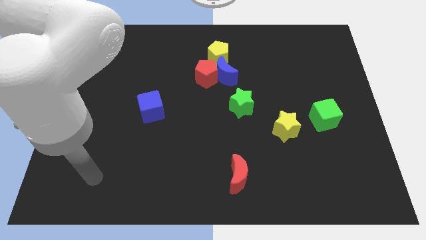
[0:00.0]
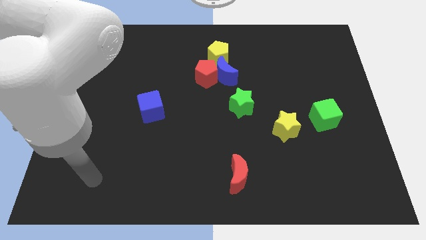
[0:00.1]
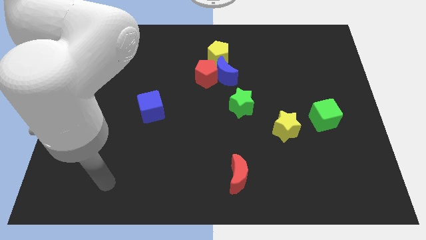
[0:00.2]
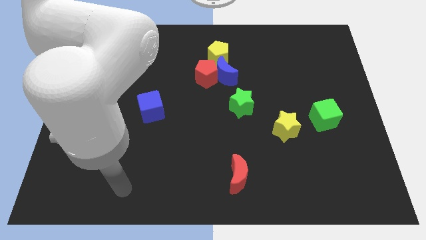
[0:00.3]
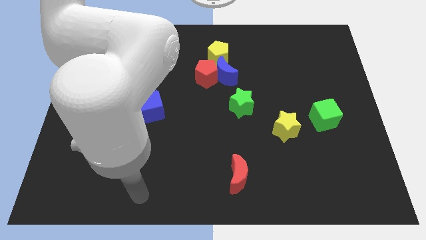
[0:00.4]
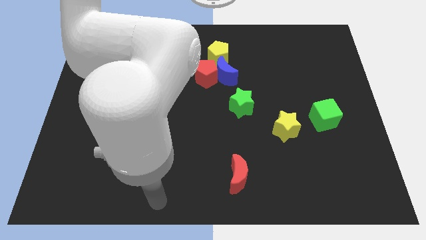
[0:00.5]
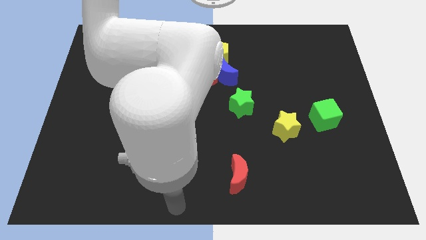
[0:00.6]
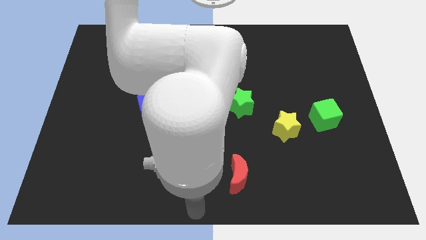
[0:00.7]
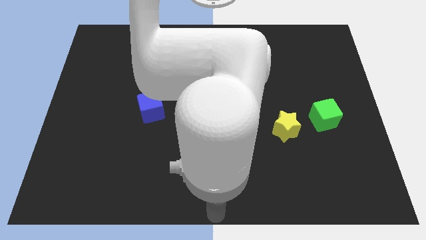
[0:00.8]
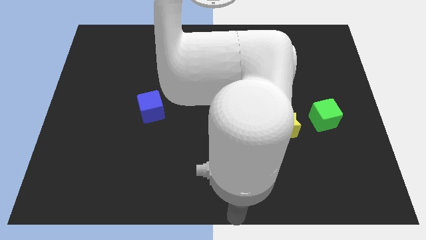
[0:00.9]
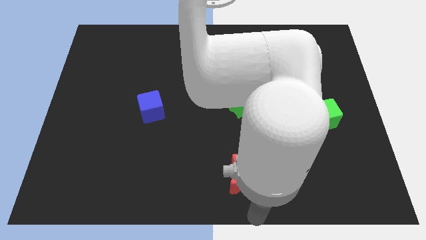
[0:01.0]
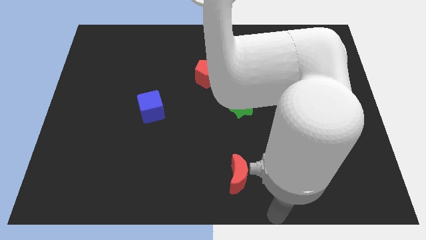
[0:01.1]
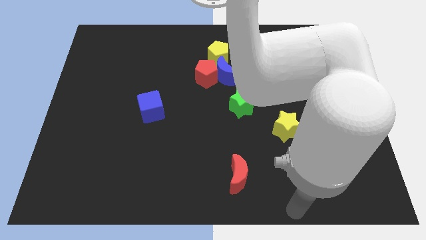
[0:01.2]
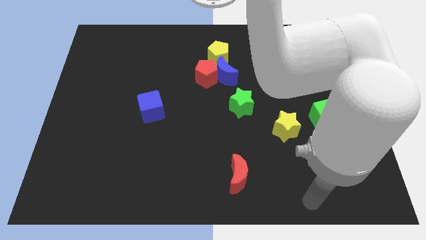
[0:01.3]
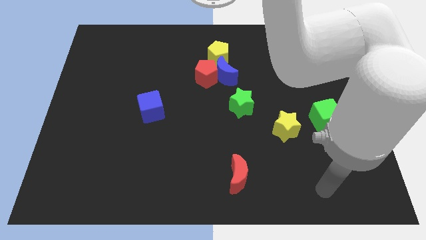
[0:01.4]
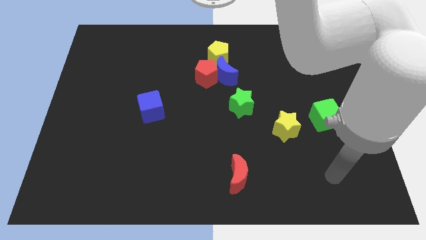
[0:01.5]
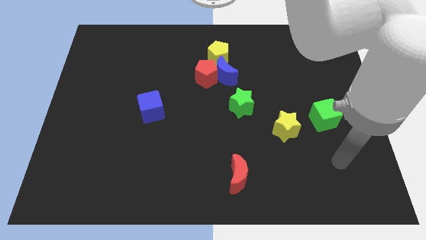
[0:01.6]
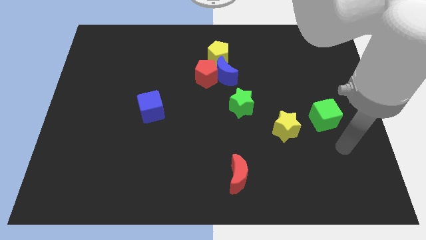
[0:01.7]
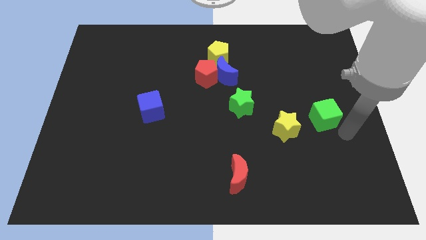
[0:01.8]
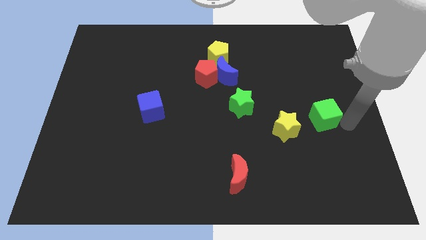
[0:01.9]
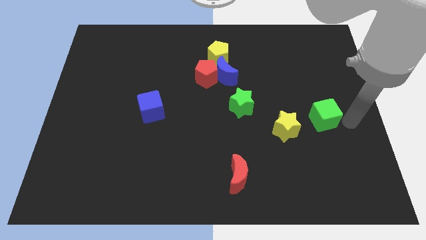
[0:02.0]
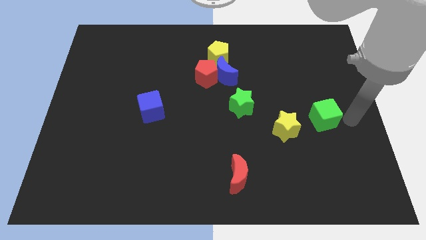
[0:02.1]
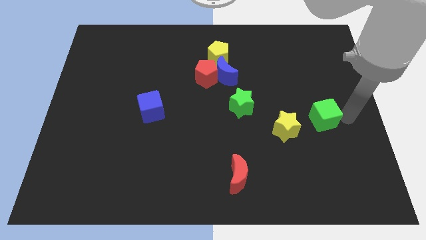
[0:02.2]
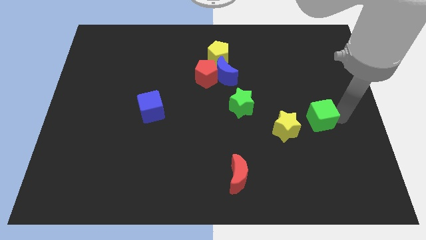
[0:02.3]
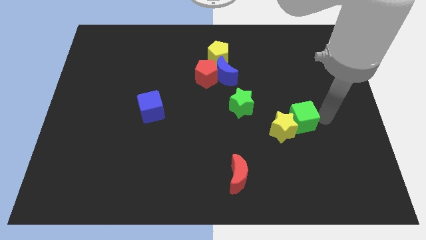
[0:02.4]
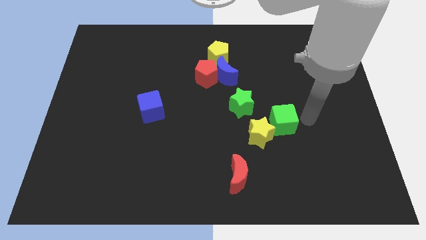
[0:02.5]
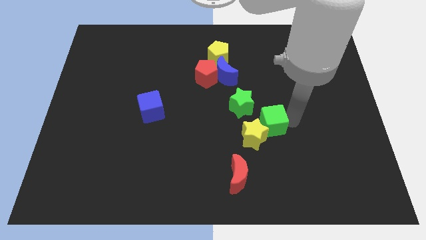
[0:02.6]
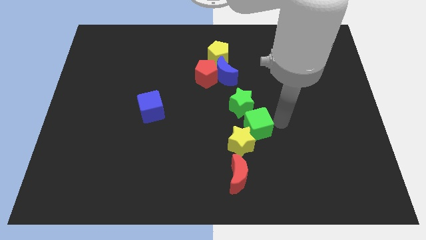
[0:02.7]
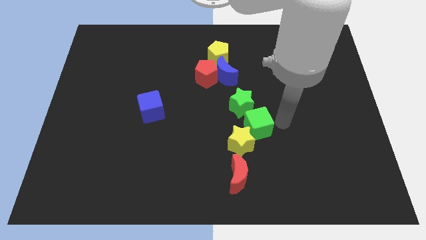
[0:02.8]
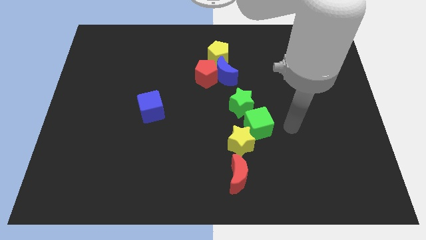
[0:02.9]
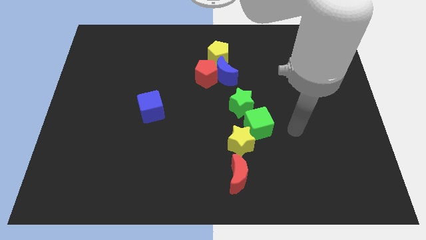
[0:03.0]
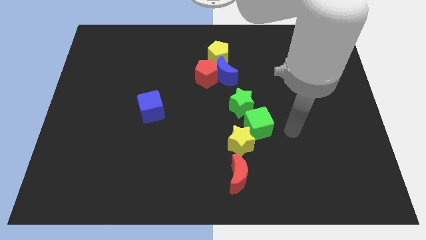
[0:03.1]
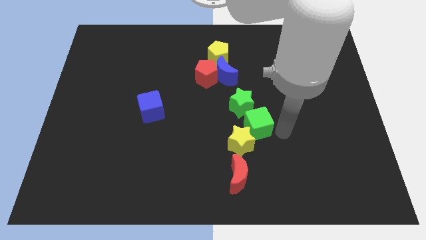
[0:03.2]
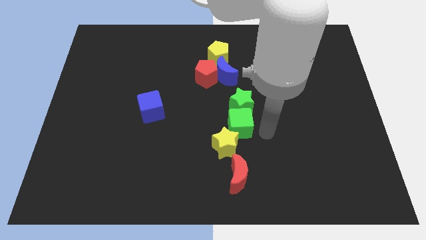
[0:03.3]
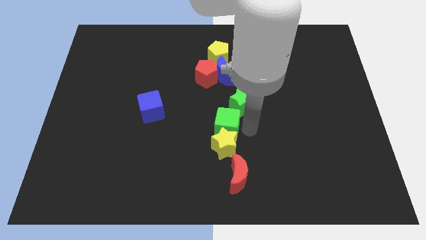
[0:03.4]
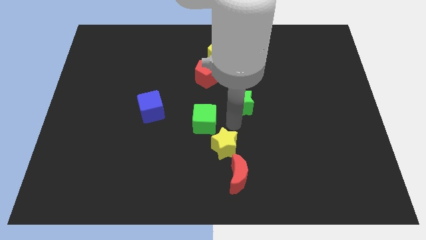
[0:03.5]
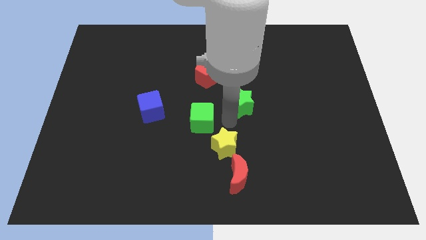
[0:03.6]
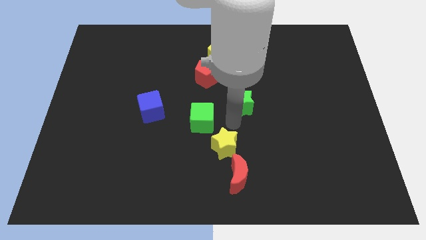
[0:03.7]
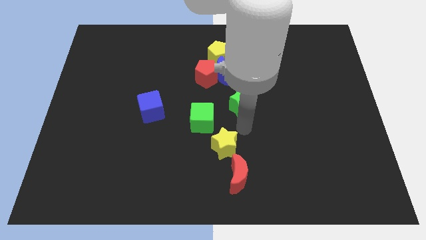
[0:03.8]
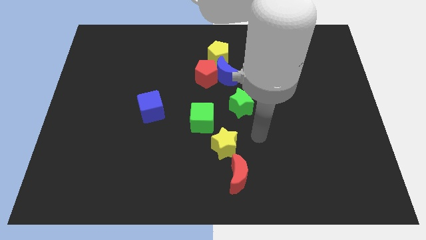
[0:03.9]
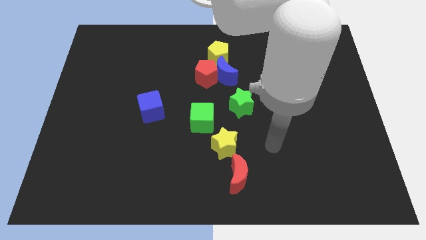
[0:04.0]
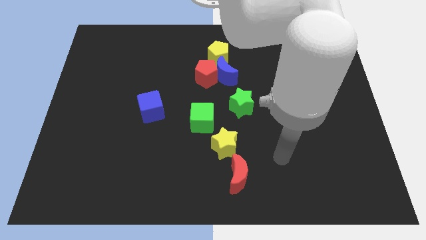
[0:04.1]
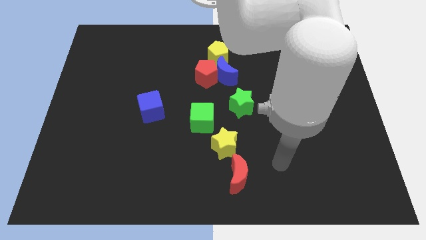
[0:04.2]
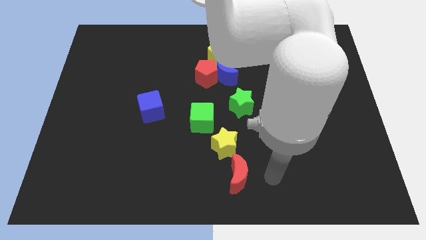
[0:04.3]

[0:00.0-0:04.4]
move the green cube to the center

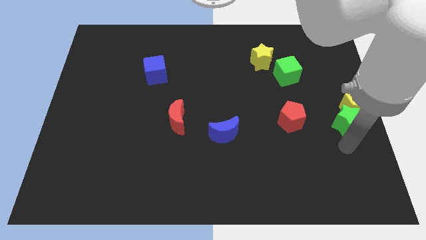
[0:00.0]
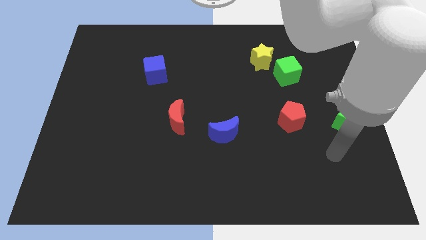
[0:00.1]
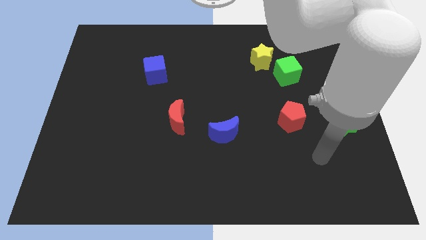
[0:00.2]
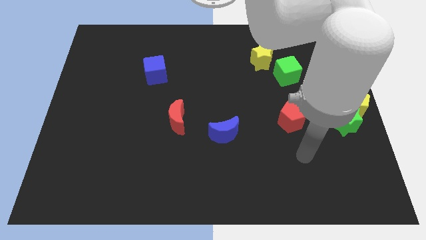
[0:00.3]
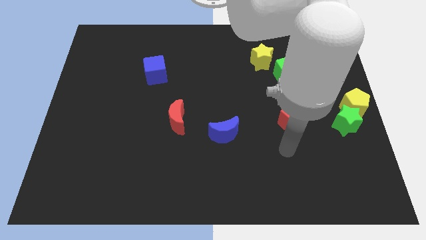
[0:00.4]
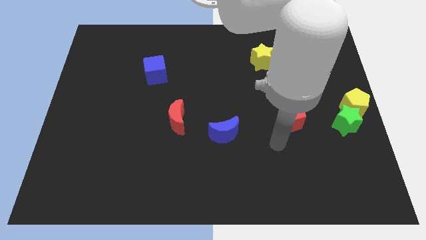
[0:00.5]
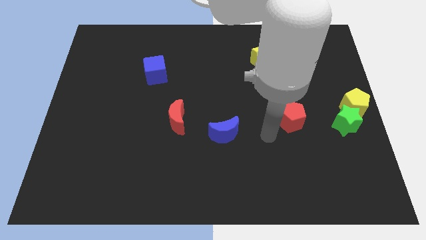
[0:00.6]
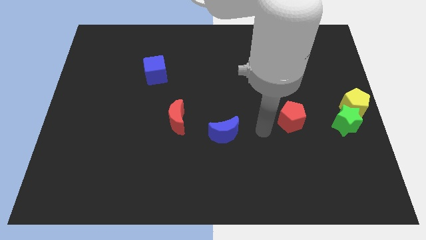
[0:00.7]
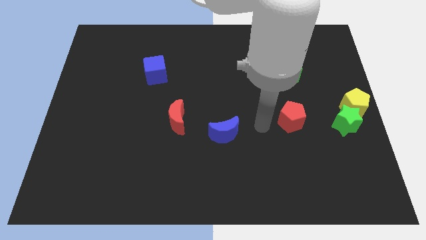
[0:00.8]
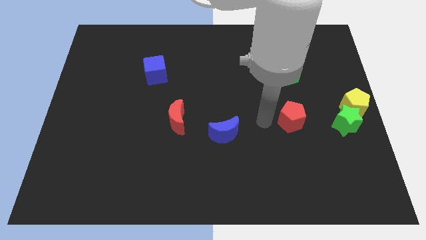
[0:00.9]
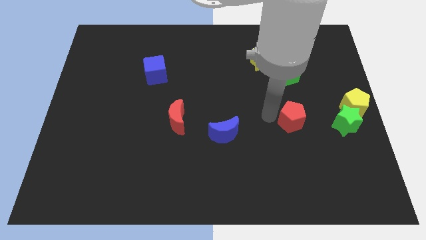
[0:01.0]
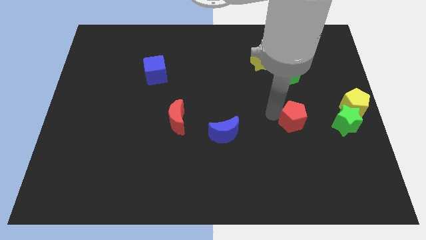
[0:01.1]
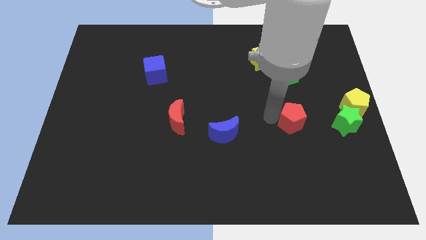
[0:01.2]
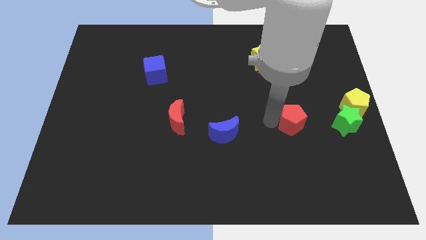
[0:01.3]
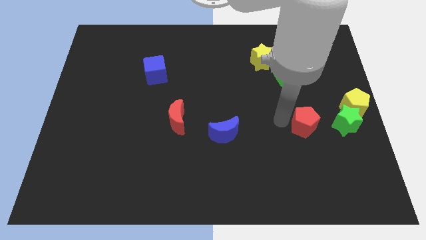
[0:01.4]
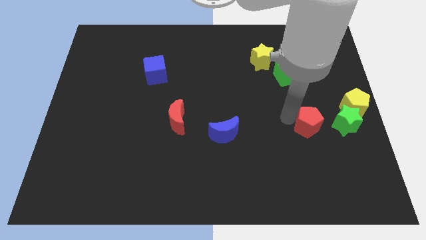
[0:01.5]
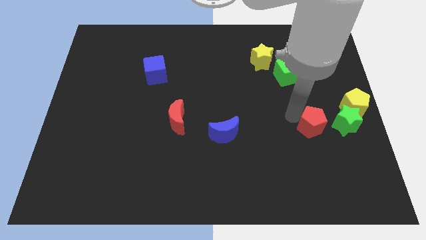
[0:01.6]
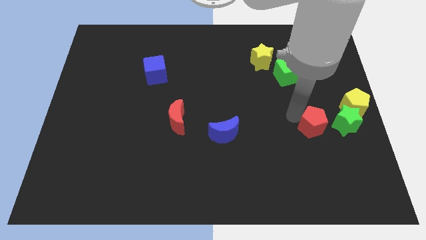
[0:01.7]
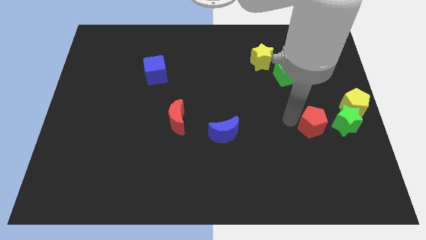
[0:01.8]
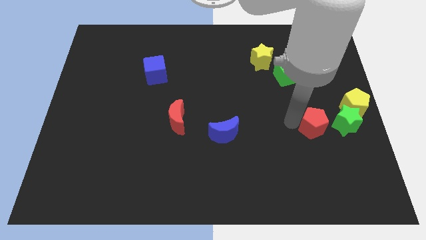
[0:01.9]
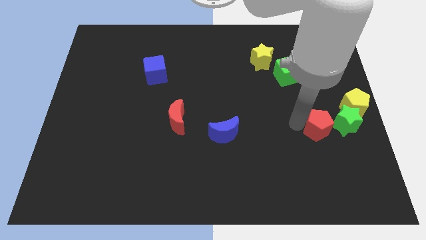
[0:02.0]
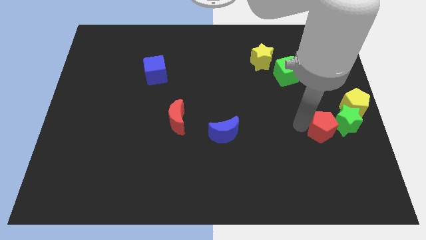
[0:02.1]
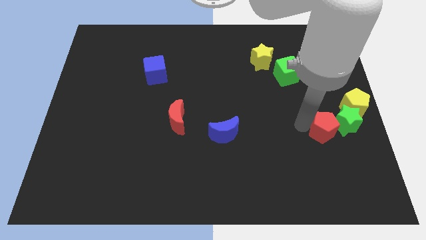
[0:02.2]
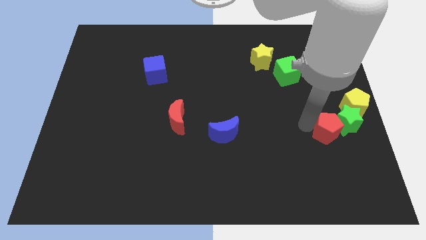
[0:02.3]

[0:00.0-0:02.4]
push the red pentagon to the left of green star

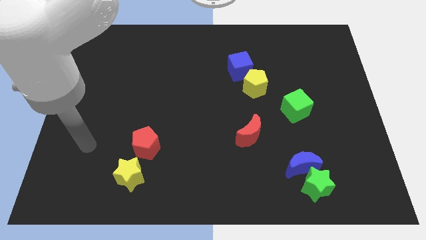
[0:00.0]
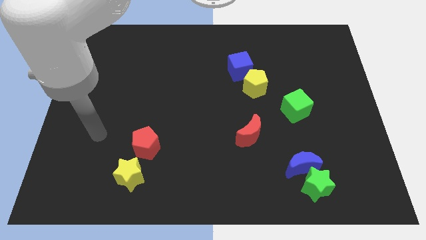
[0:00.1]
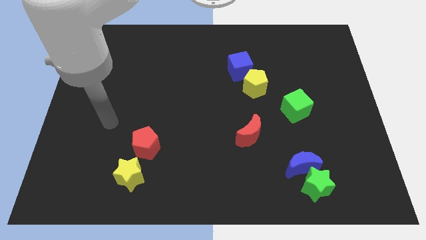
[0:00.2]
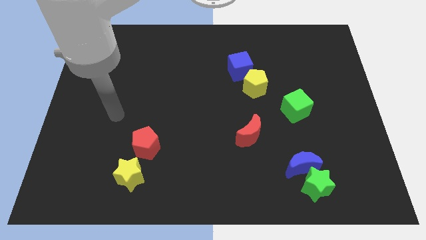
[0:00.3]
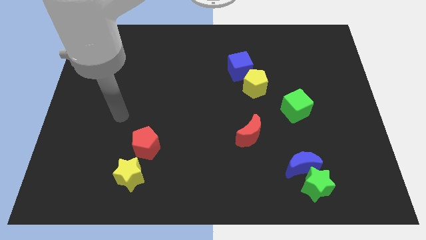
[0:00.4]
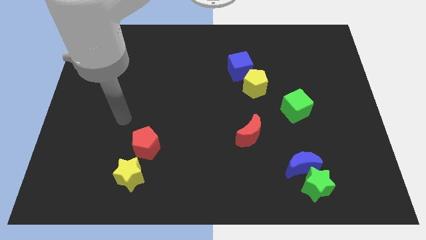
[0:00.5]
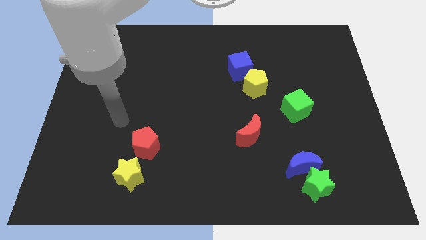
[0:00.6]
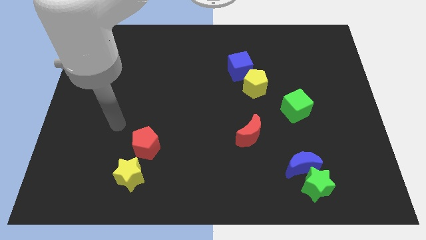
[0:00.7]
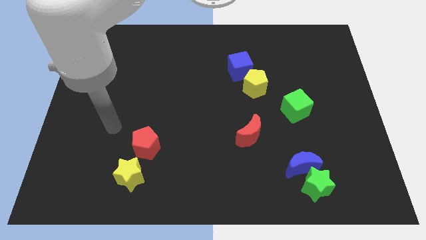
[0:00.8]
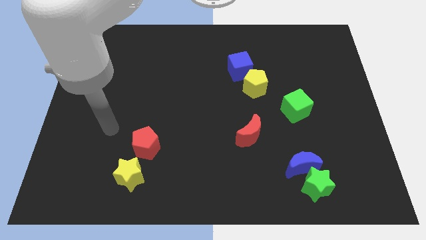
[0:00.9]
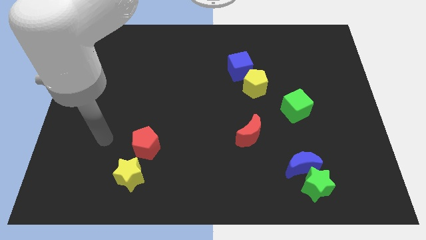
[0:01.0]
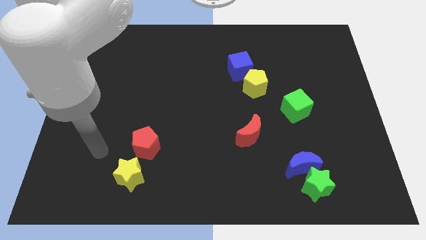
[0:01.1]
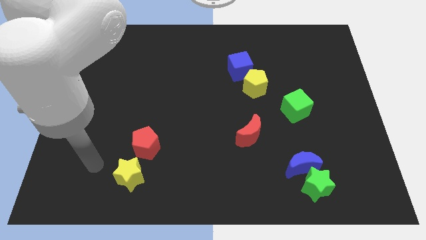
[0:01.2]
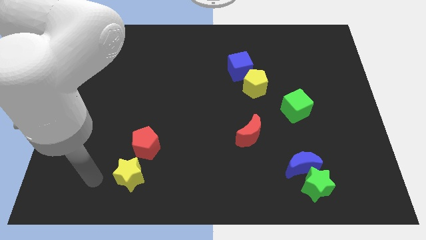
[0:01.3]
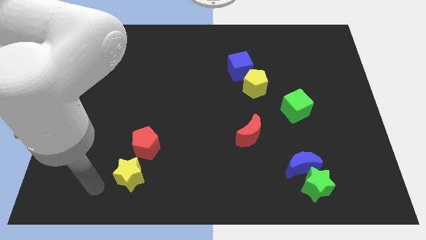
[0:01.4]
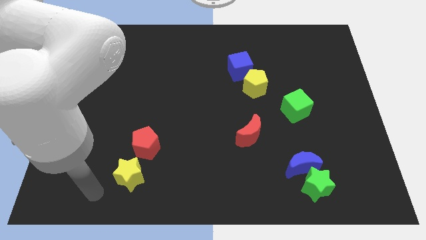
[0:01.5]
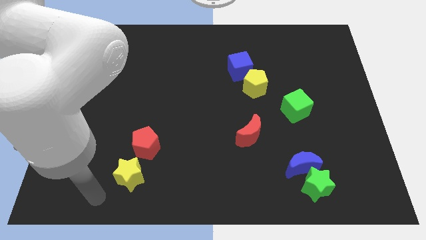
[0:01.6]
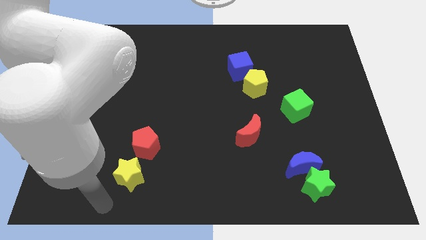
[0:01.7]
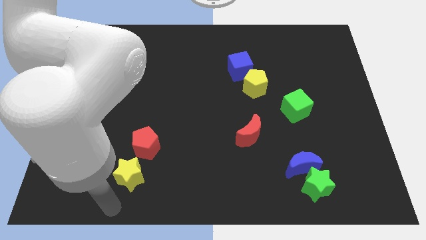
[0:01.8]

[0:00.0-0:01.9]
place your hand vertically below the yellow star

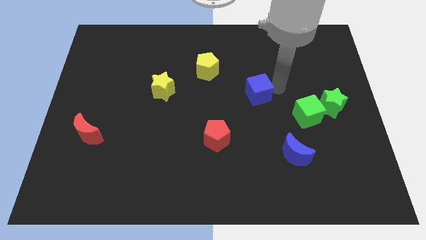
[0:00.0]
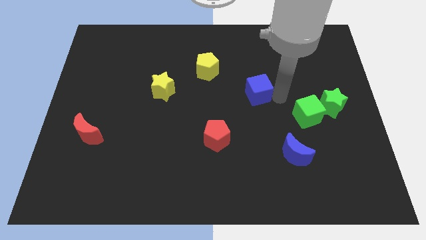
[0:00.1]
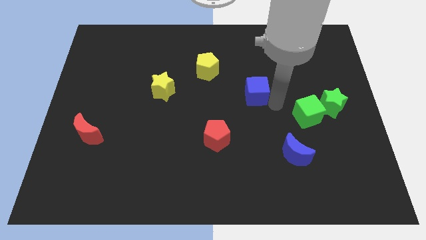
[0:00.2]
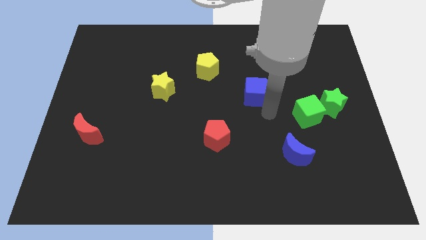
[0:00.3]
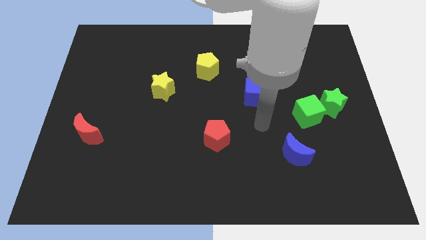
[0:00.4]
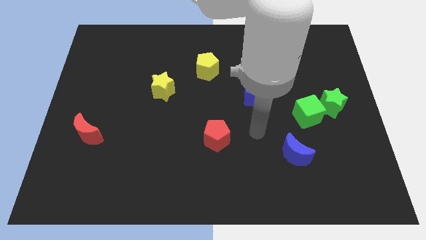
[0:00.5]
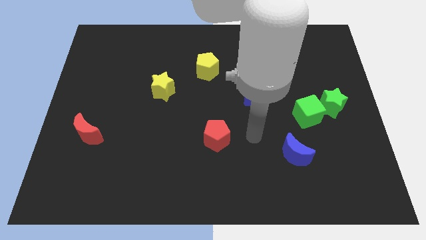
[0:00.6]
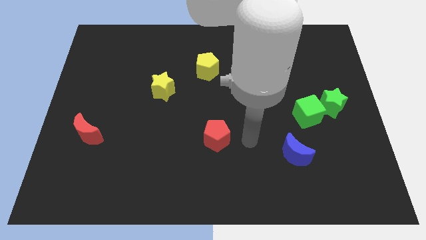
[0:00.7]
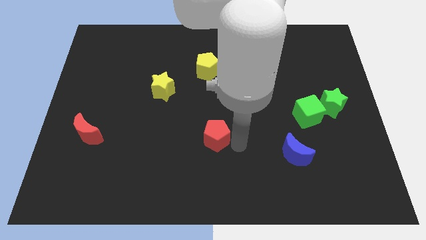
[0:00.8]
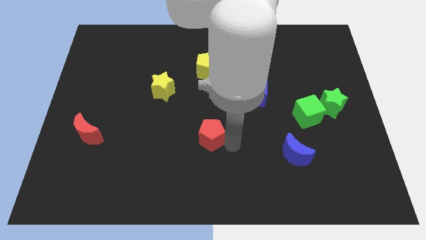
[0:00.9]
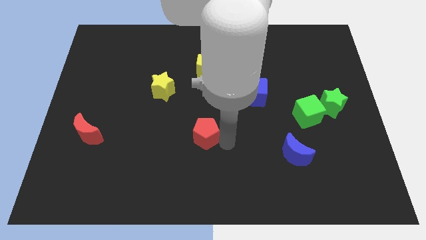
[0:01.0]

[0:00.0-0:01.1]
touch the bottom of red pentagon
